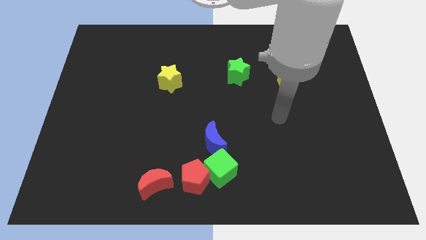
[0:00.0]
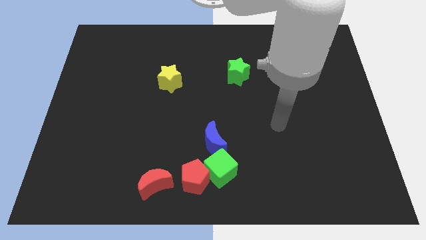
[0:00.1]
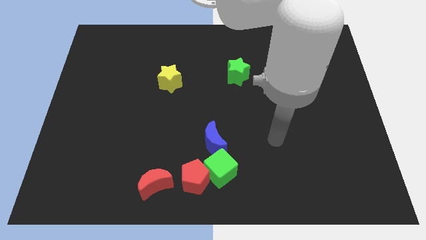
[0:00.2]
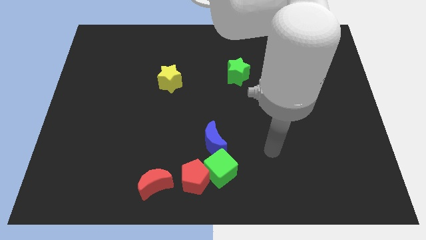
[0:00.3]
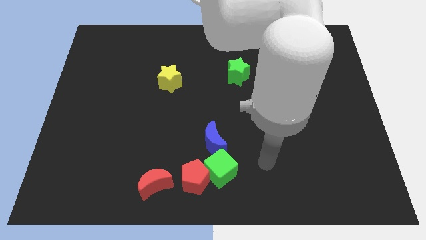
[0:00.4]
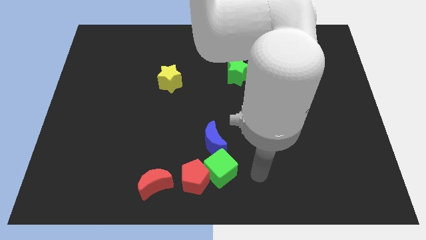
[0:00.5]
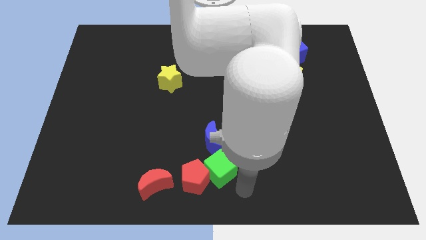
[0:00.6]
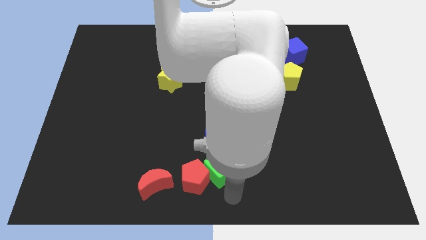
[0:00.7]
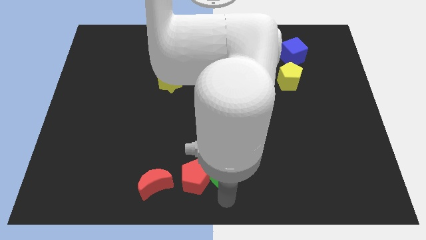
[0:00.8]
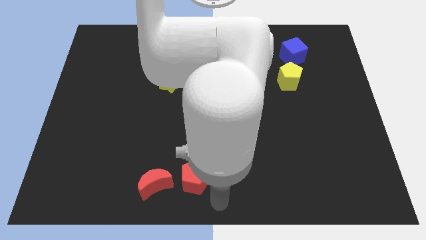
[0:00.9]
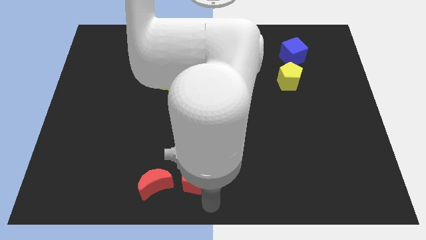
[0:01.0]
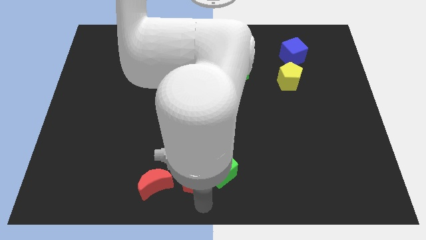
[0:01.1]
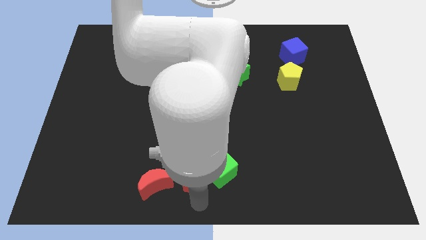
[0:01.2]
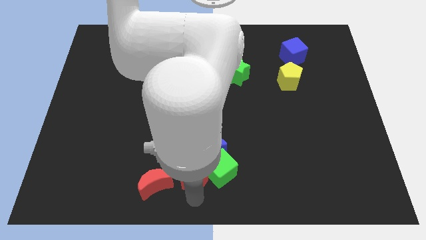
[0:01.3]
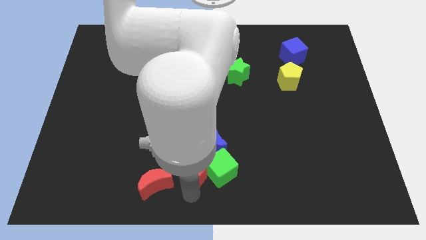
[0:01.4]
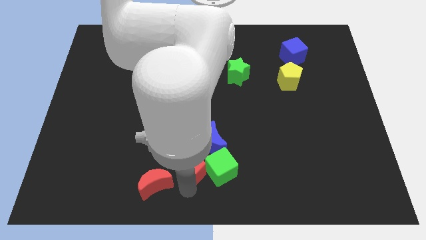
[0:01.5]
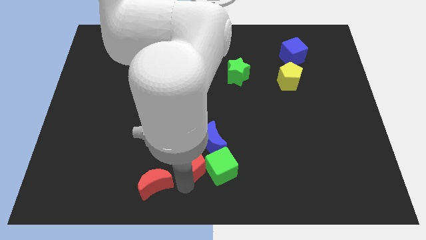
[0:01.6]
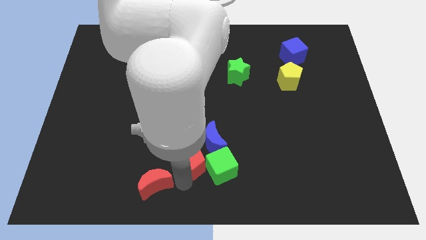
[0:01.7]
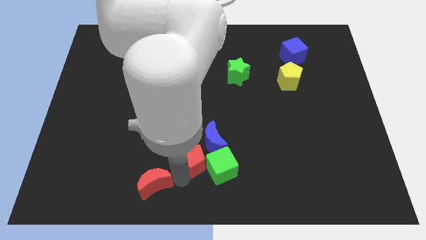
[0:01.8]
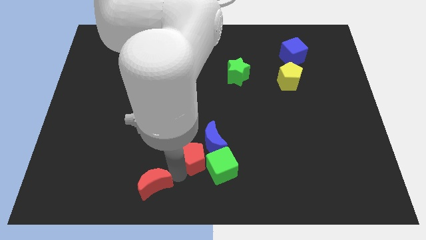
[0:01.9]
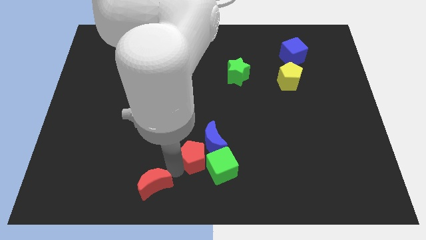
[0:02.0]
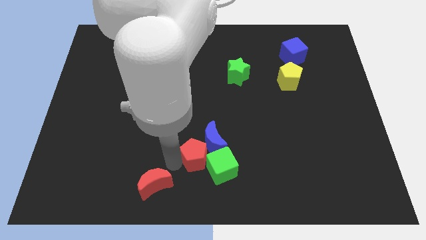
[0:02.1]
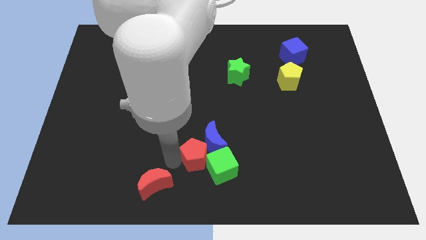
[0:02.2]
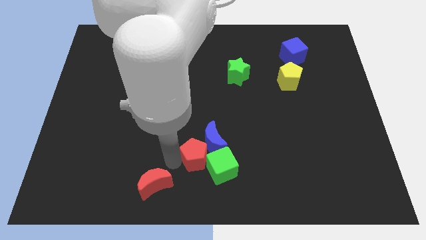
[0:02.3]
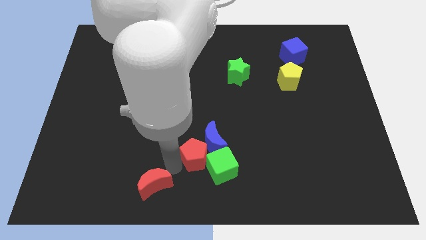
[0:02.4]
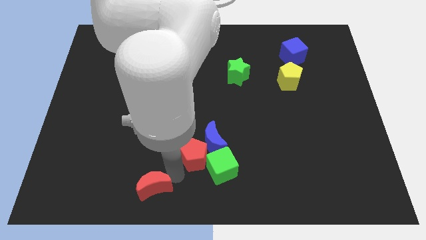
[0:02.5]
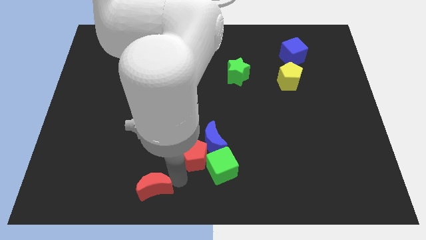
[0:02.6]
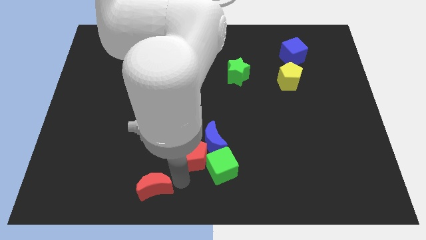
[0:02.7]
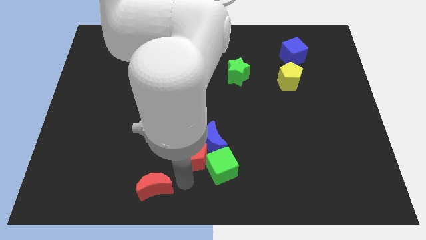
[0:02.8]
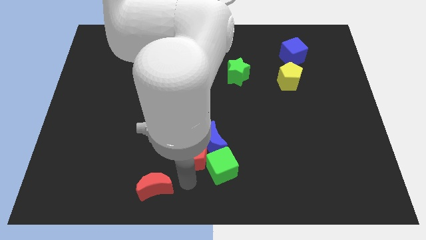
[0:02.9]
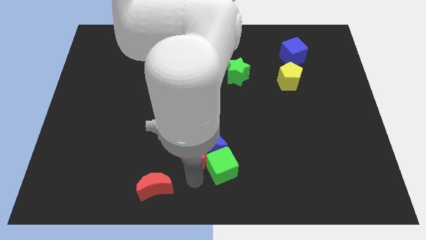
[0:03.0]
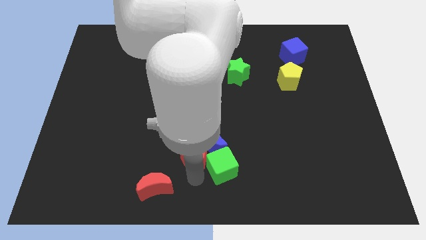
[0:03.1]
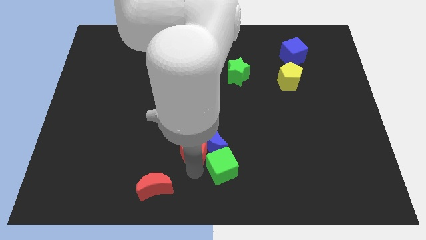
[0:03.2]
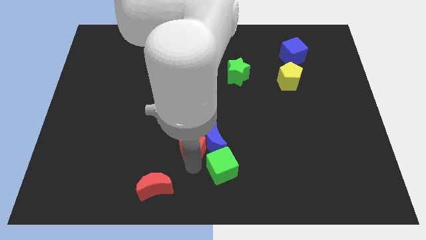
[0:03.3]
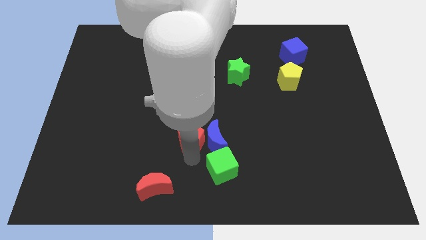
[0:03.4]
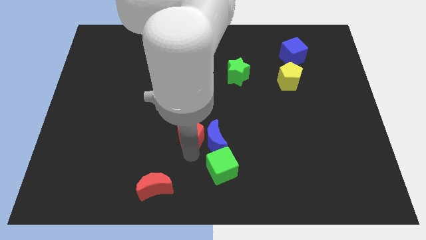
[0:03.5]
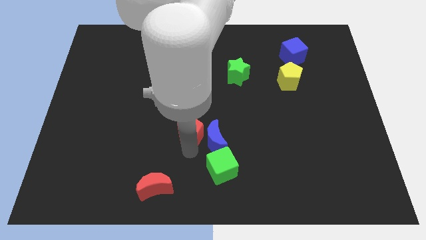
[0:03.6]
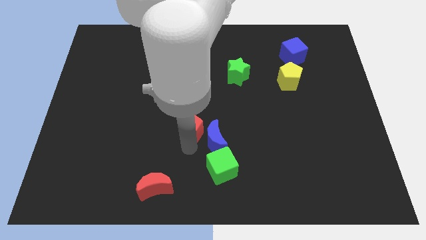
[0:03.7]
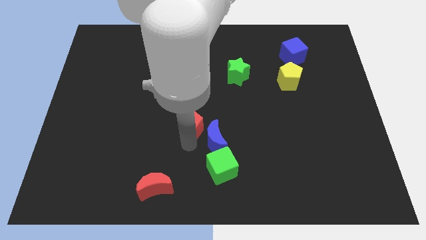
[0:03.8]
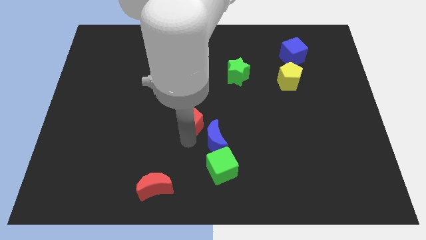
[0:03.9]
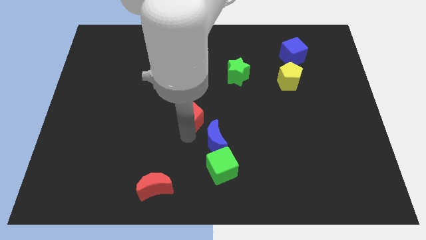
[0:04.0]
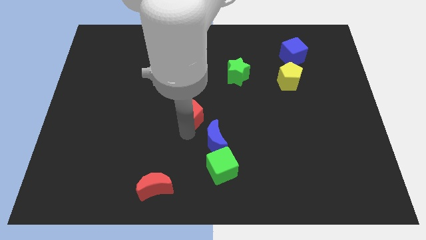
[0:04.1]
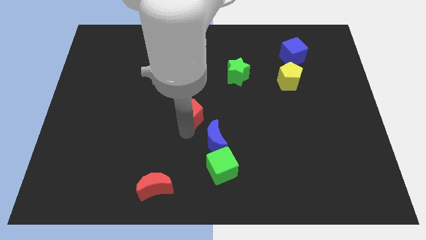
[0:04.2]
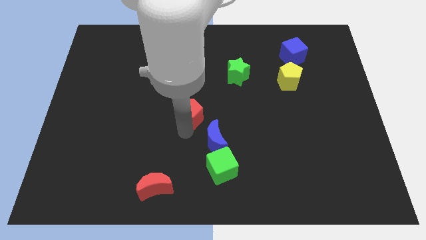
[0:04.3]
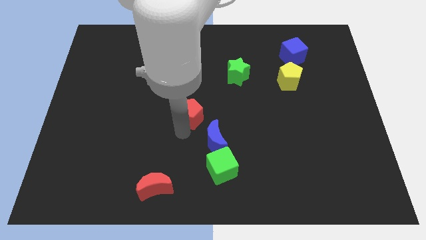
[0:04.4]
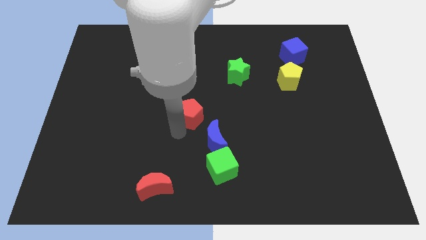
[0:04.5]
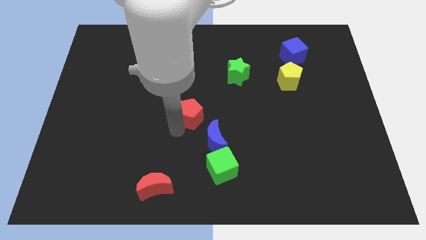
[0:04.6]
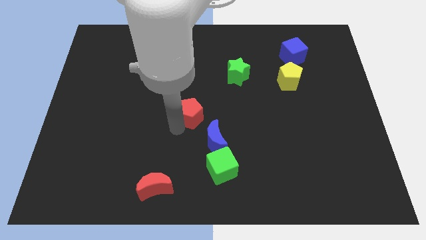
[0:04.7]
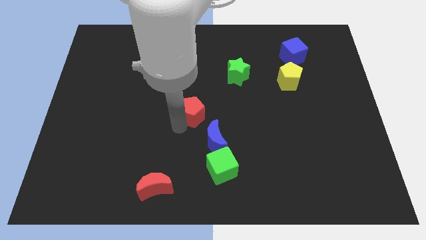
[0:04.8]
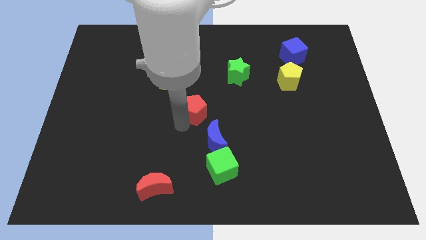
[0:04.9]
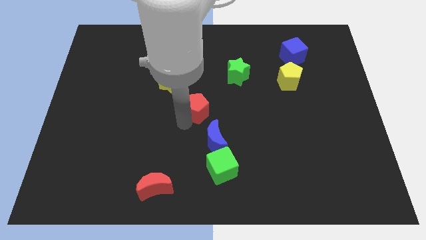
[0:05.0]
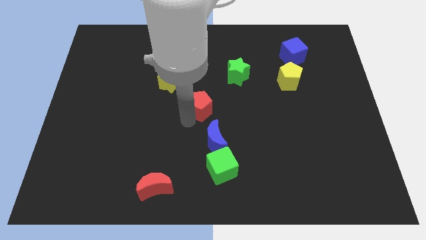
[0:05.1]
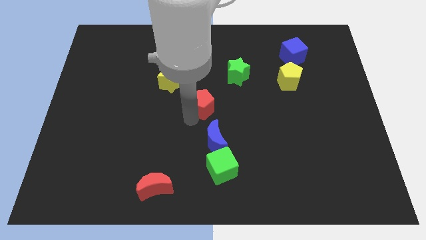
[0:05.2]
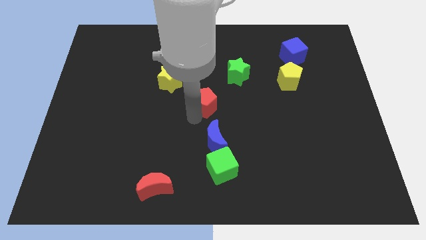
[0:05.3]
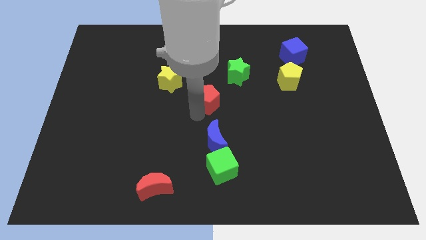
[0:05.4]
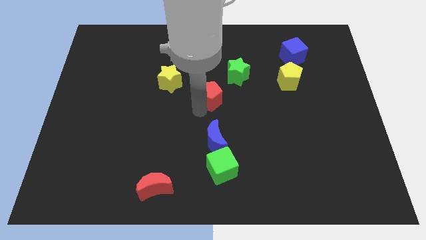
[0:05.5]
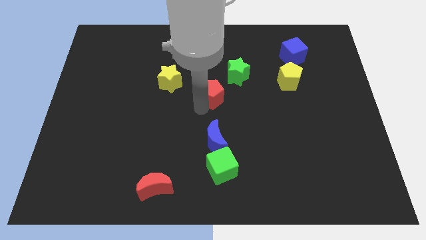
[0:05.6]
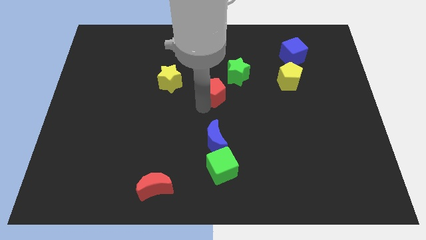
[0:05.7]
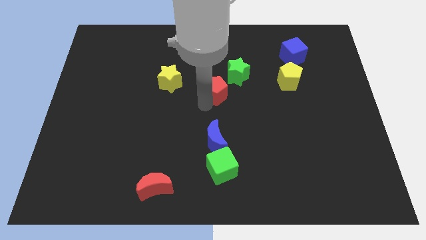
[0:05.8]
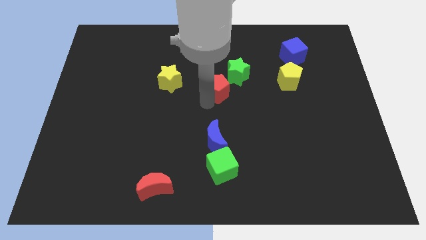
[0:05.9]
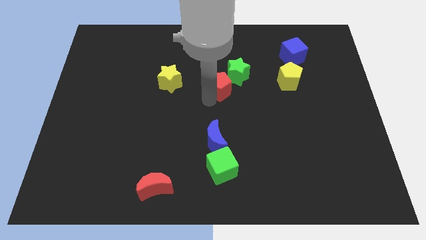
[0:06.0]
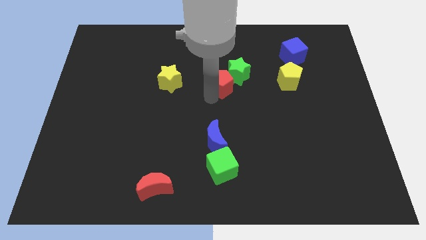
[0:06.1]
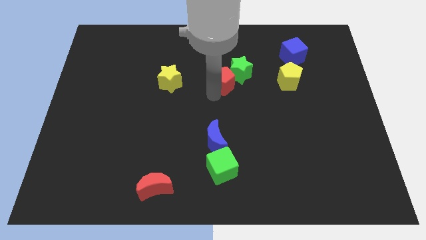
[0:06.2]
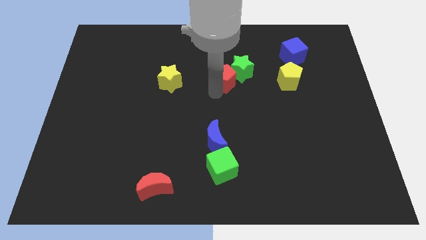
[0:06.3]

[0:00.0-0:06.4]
push the red pentagon to the green star

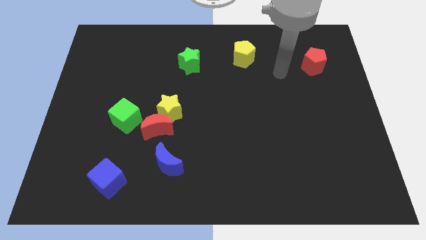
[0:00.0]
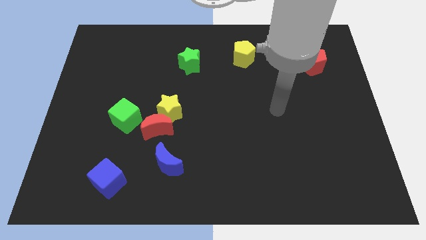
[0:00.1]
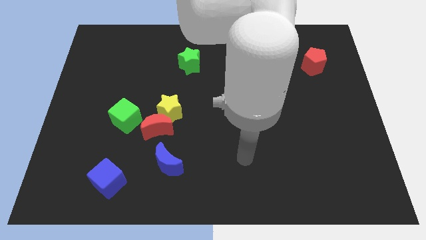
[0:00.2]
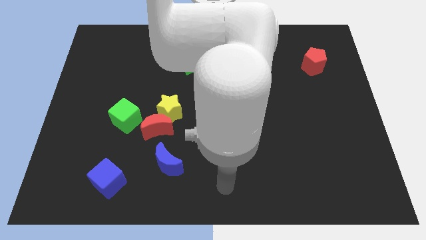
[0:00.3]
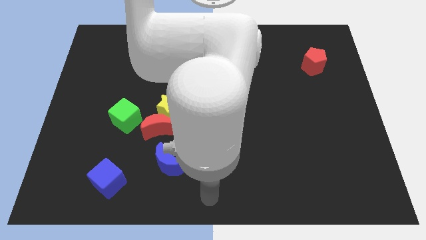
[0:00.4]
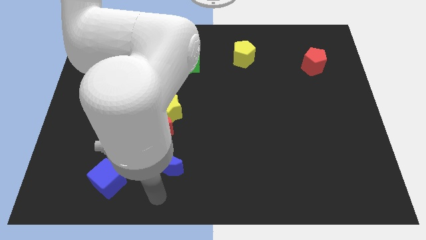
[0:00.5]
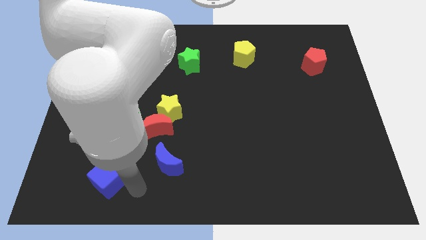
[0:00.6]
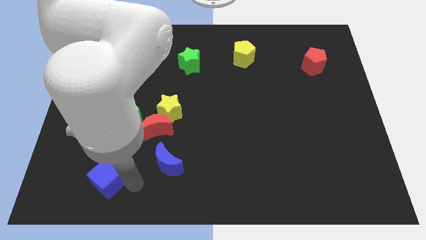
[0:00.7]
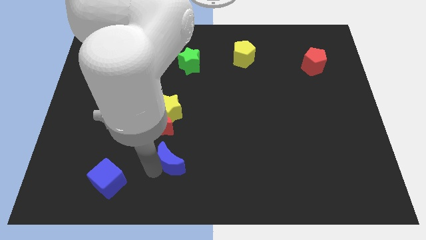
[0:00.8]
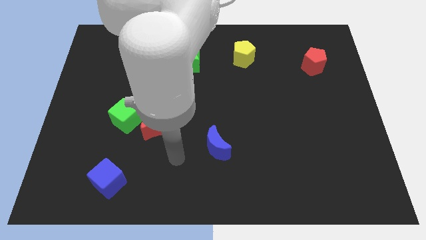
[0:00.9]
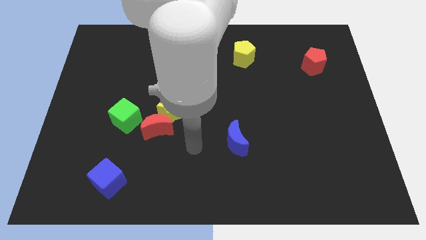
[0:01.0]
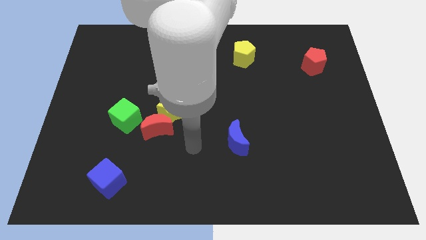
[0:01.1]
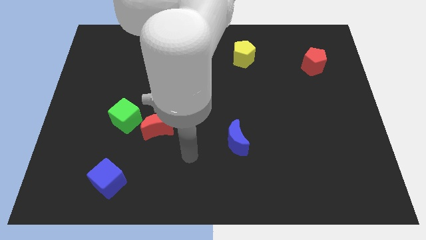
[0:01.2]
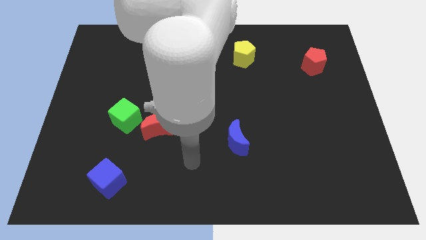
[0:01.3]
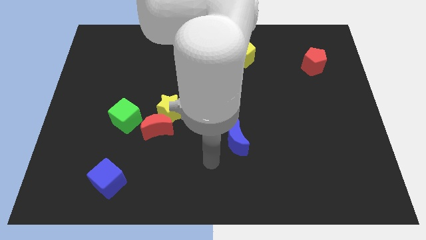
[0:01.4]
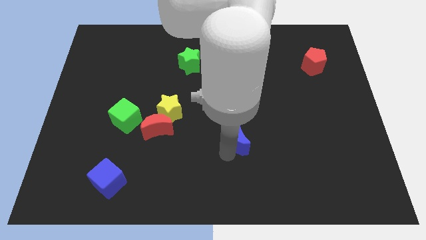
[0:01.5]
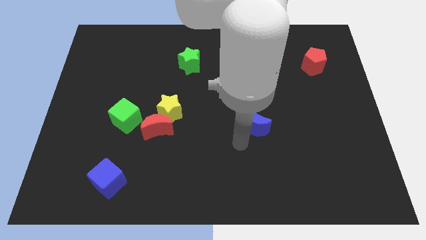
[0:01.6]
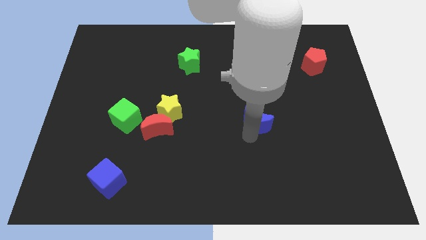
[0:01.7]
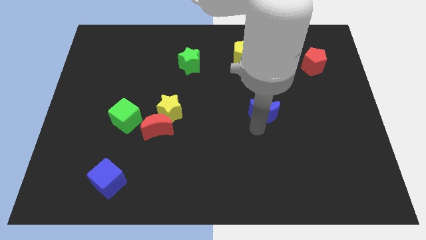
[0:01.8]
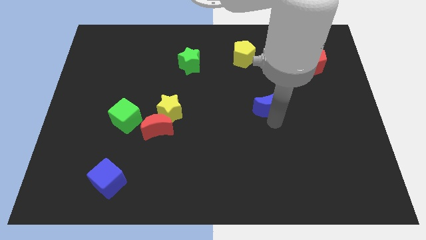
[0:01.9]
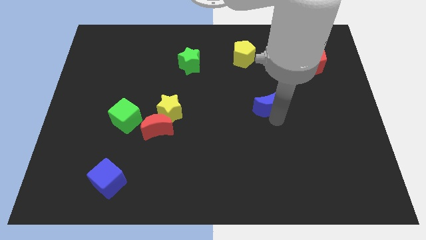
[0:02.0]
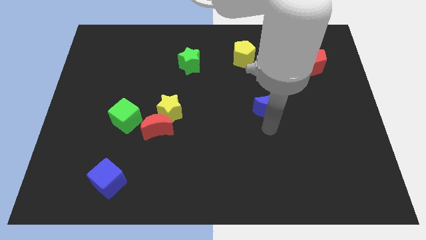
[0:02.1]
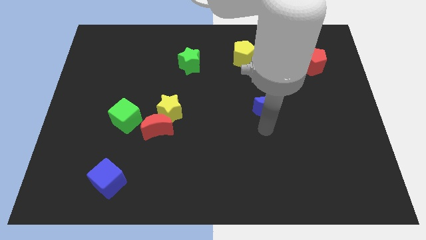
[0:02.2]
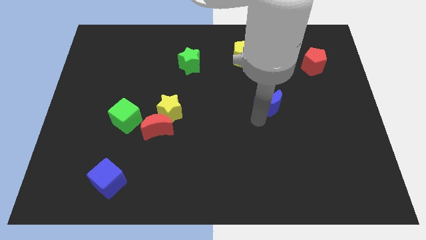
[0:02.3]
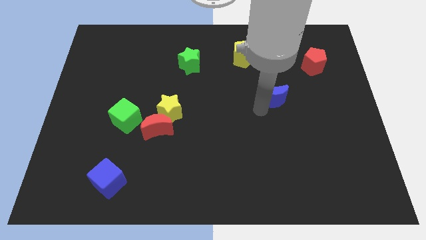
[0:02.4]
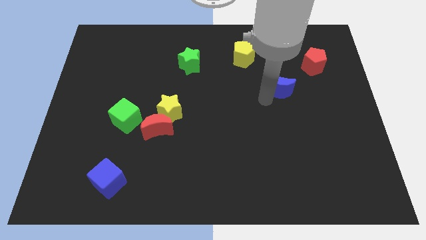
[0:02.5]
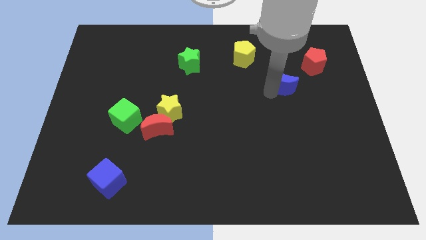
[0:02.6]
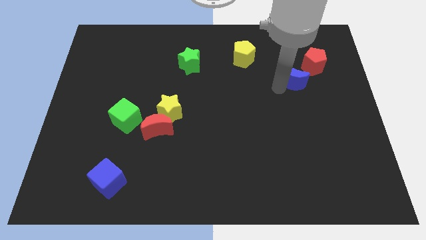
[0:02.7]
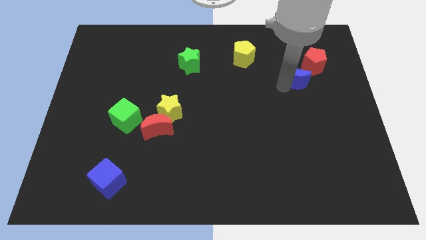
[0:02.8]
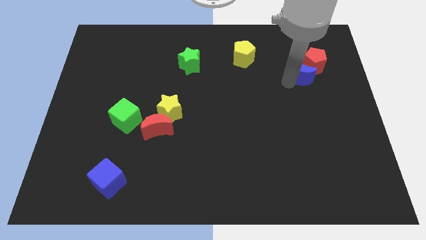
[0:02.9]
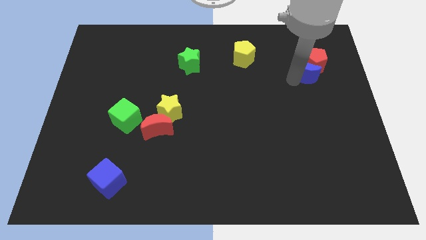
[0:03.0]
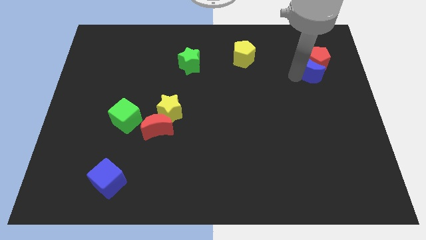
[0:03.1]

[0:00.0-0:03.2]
put the blue moon to the red pentagon
